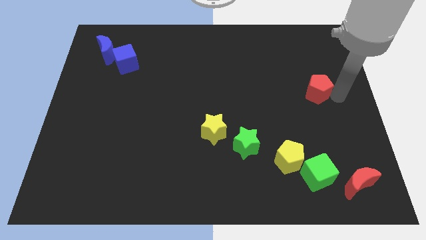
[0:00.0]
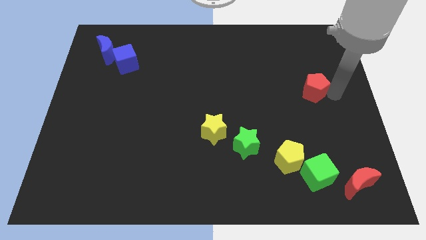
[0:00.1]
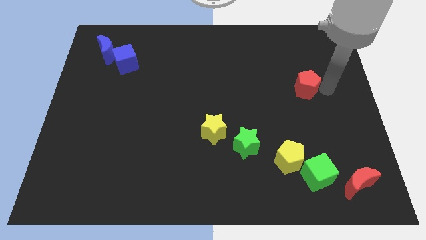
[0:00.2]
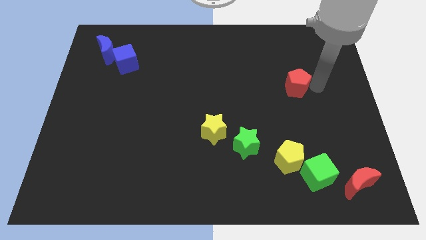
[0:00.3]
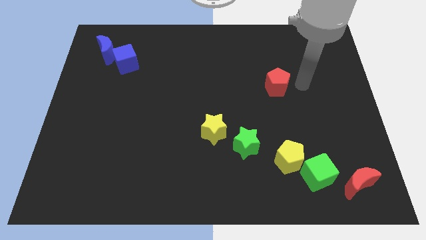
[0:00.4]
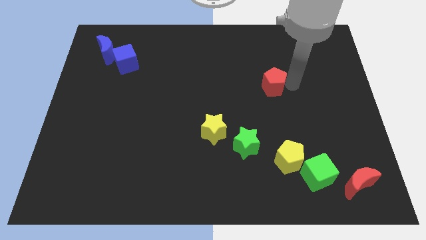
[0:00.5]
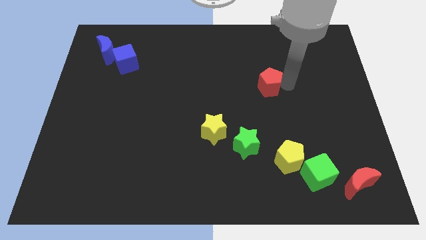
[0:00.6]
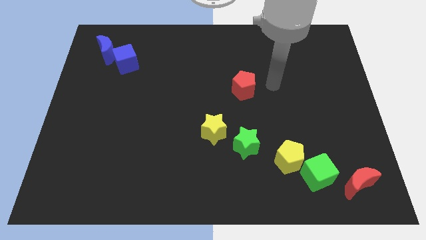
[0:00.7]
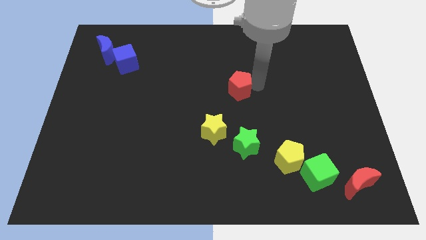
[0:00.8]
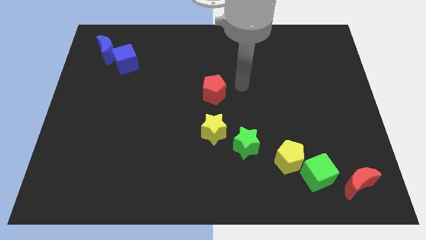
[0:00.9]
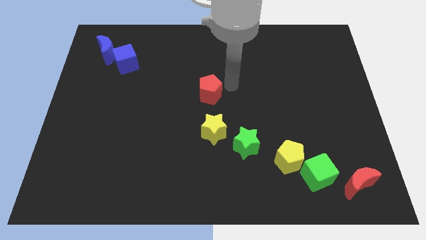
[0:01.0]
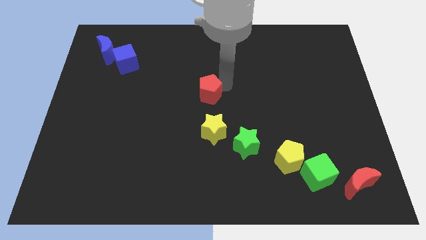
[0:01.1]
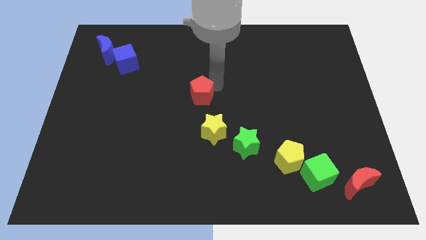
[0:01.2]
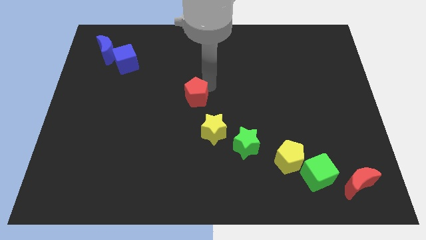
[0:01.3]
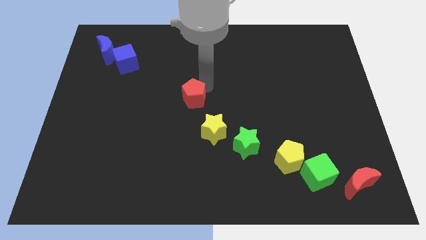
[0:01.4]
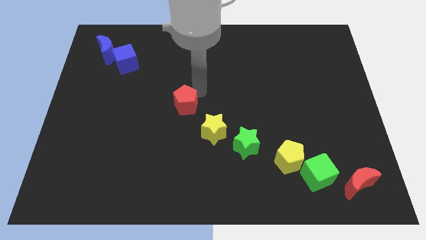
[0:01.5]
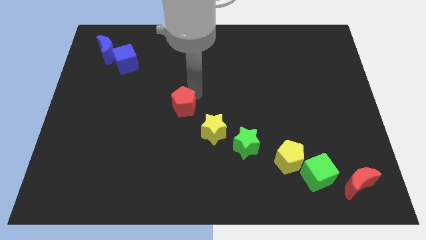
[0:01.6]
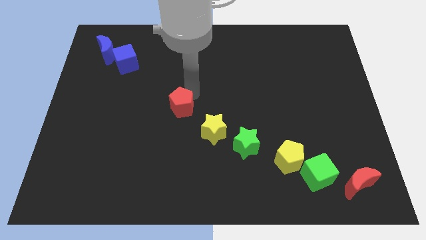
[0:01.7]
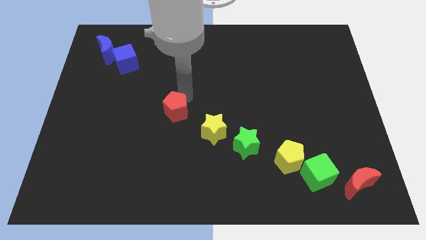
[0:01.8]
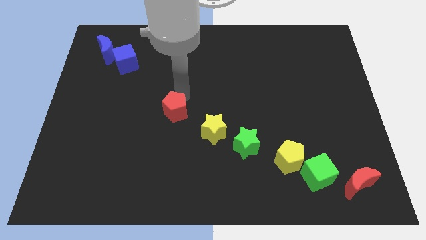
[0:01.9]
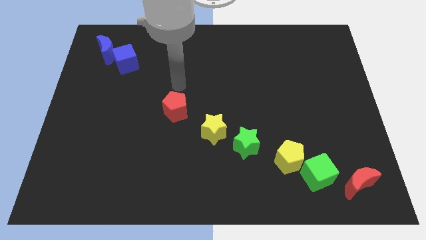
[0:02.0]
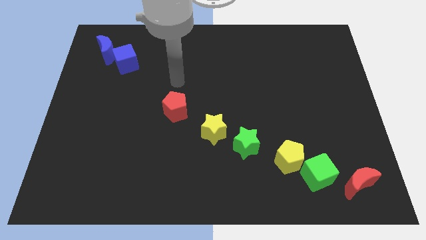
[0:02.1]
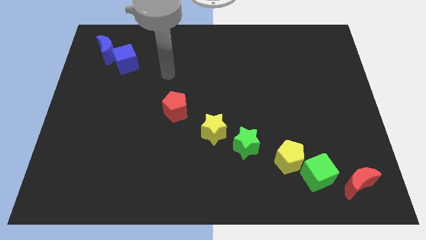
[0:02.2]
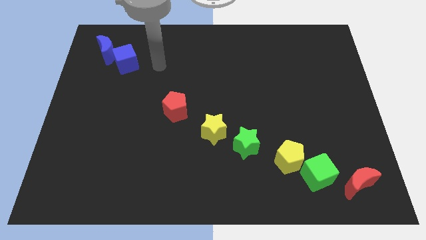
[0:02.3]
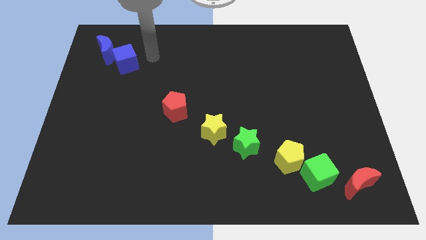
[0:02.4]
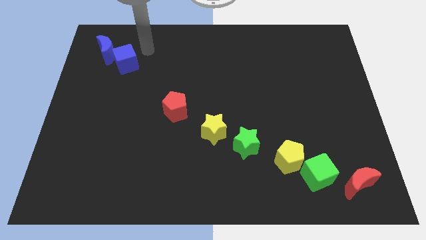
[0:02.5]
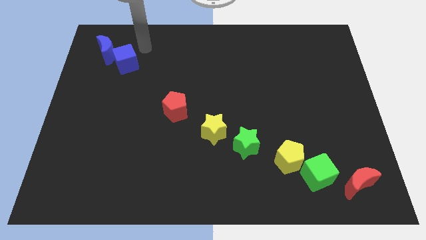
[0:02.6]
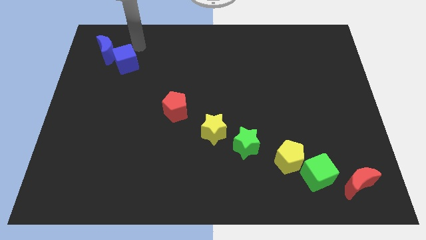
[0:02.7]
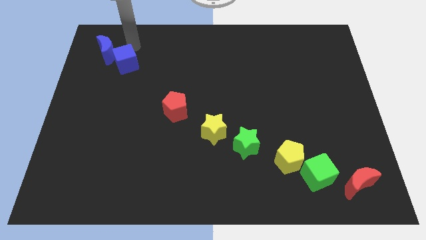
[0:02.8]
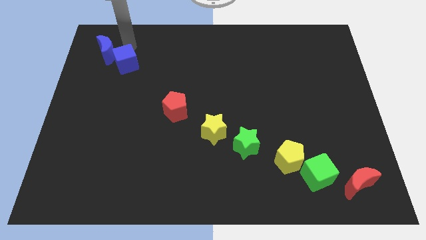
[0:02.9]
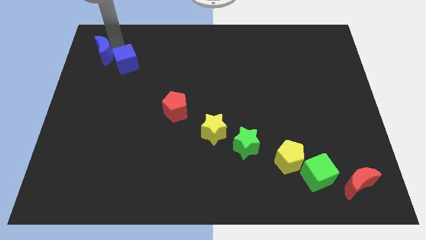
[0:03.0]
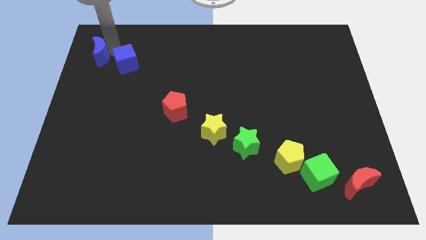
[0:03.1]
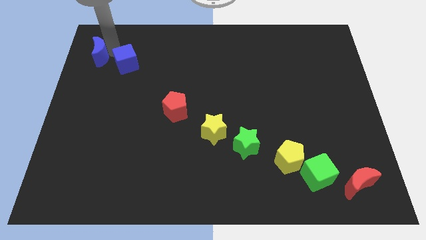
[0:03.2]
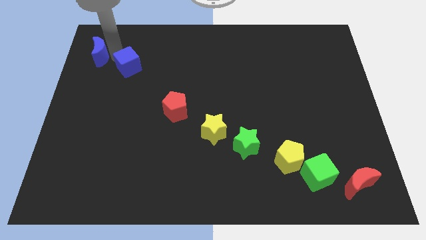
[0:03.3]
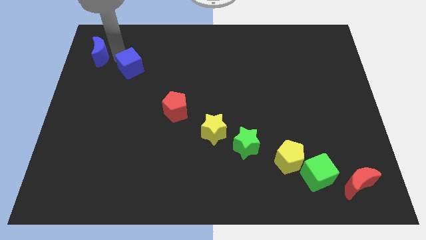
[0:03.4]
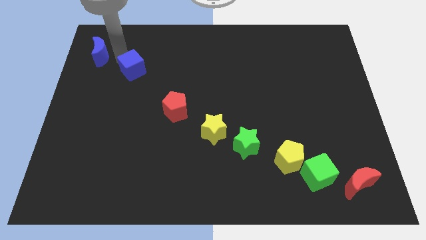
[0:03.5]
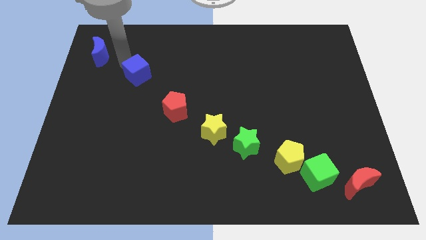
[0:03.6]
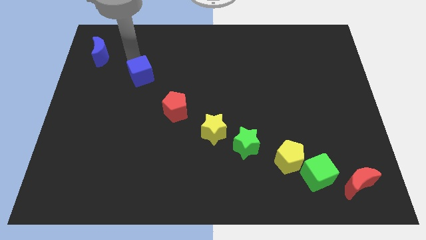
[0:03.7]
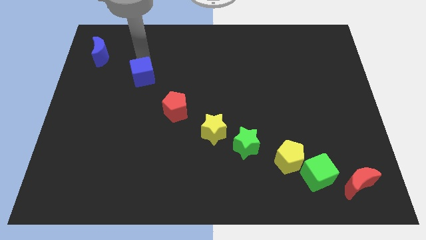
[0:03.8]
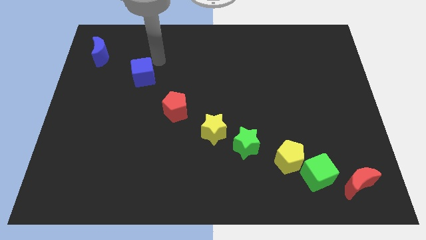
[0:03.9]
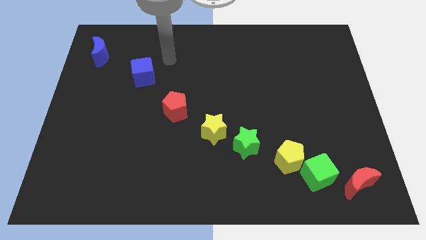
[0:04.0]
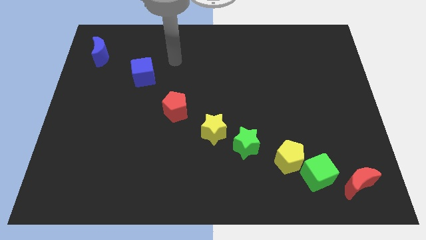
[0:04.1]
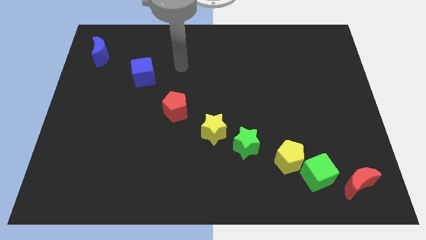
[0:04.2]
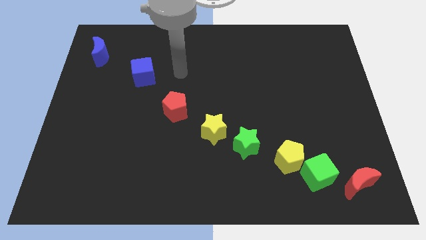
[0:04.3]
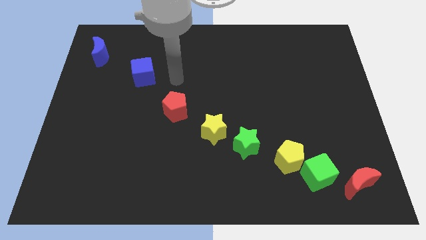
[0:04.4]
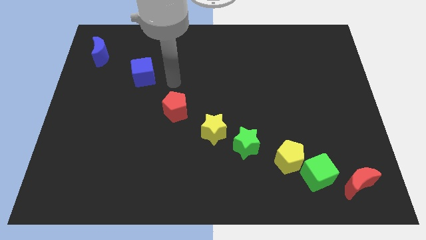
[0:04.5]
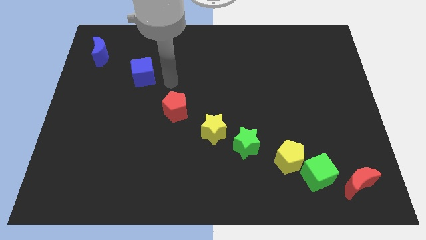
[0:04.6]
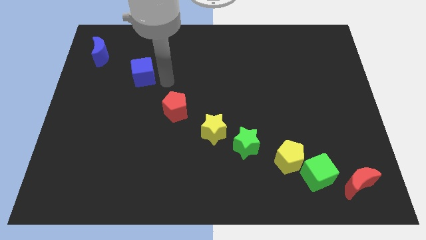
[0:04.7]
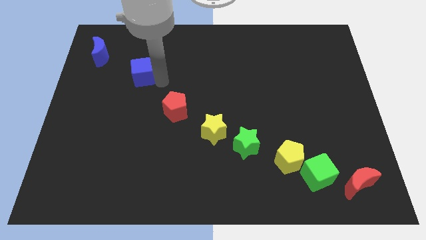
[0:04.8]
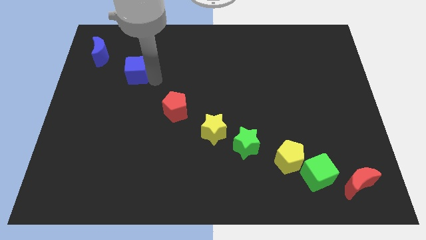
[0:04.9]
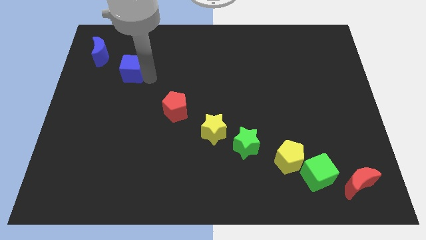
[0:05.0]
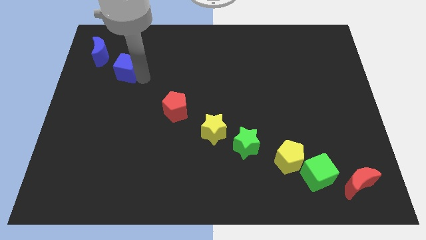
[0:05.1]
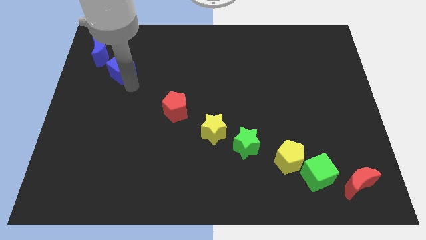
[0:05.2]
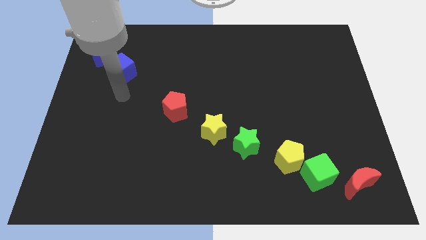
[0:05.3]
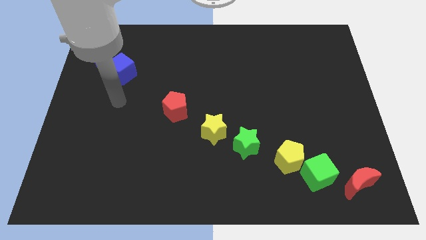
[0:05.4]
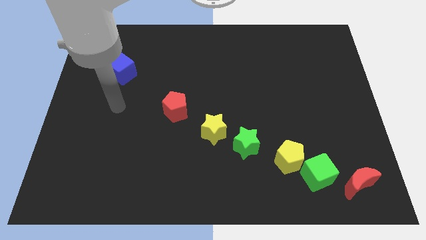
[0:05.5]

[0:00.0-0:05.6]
place blue cube close to the blue crescent

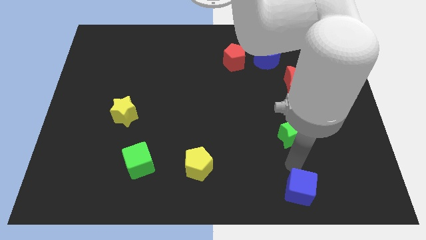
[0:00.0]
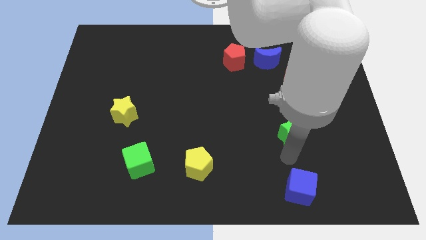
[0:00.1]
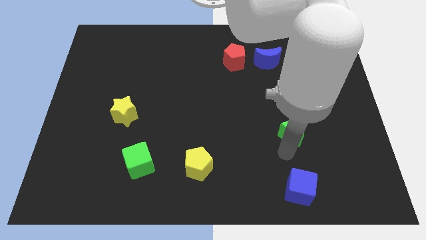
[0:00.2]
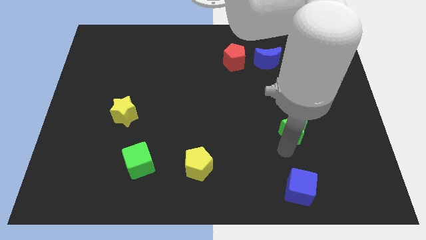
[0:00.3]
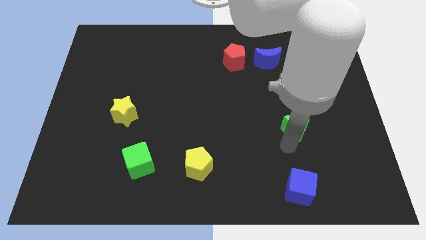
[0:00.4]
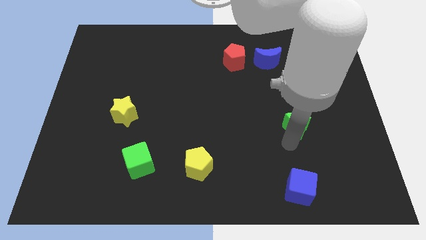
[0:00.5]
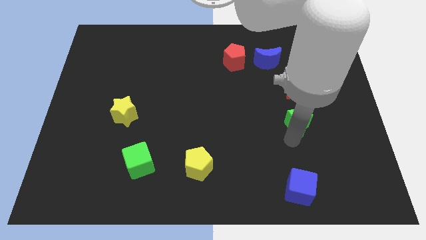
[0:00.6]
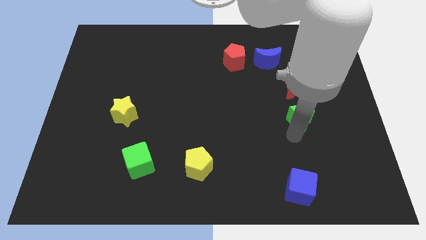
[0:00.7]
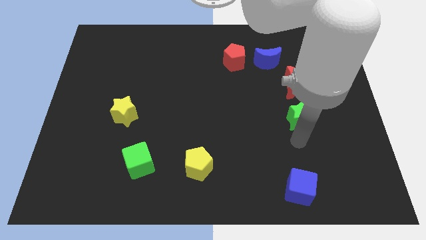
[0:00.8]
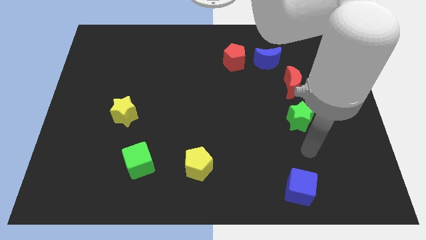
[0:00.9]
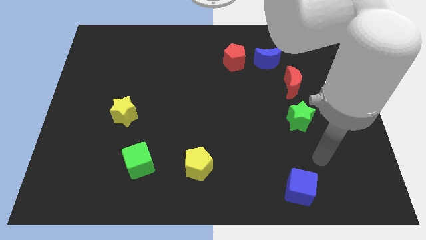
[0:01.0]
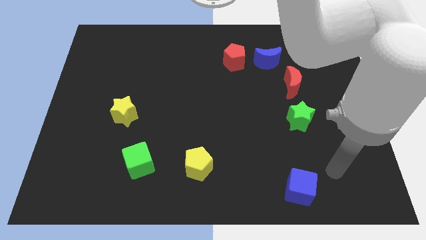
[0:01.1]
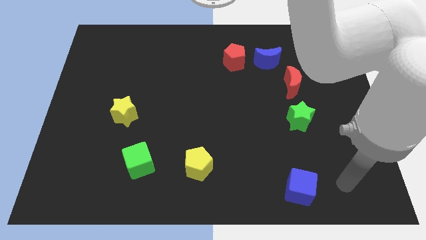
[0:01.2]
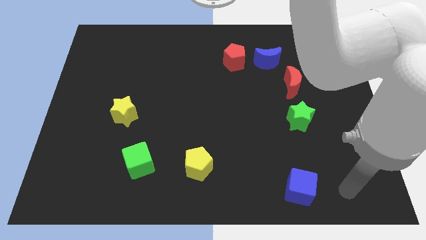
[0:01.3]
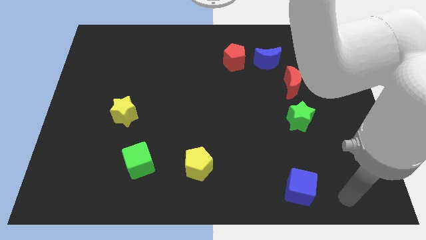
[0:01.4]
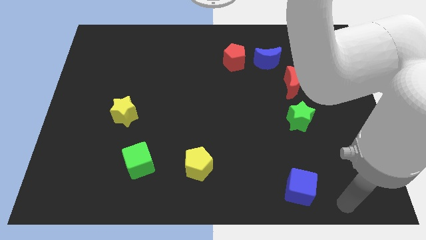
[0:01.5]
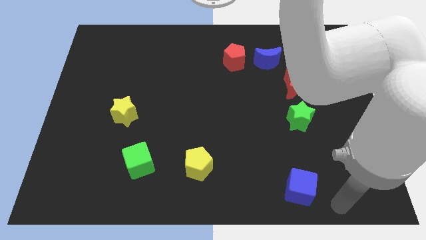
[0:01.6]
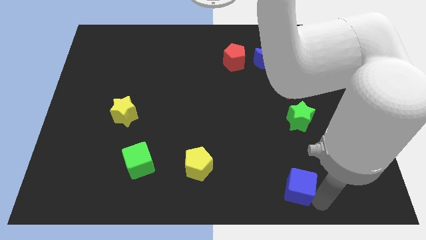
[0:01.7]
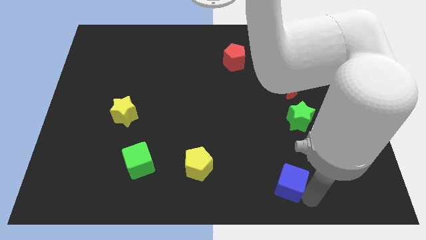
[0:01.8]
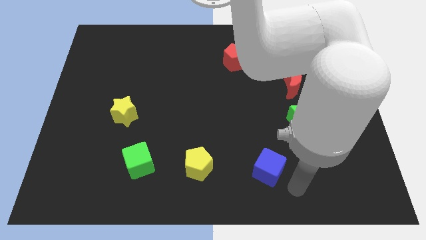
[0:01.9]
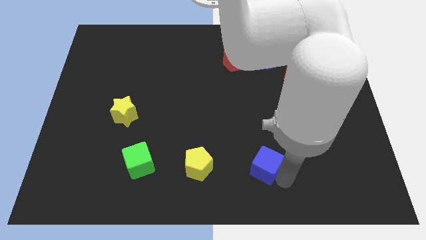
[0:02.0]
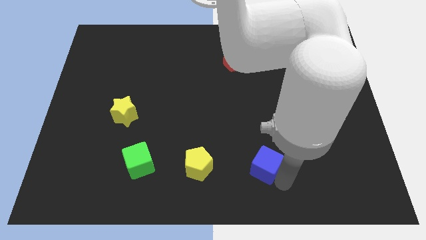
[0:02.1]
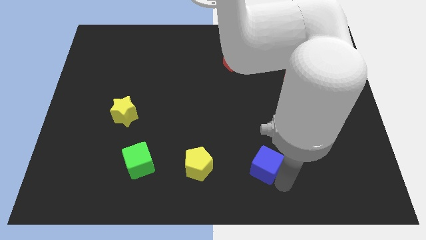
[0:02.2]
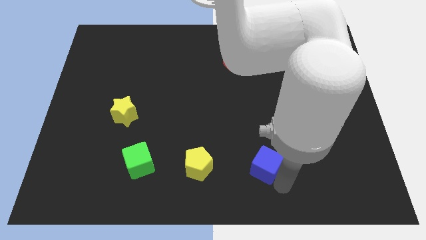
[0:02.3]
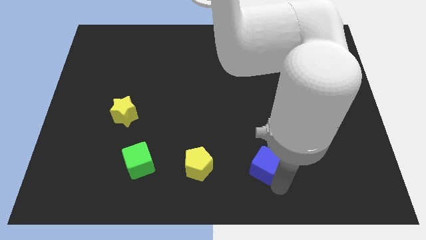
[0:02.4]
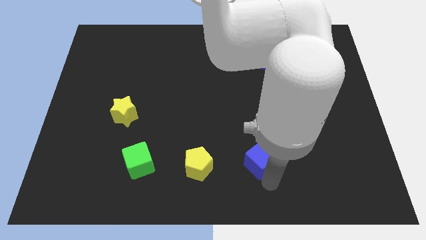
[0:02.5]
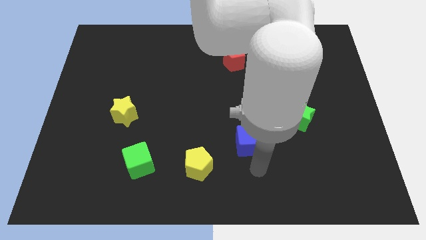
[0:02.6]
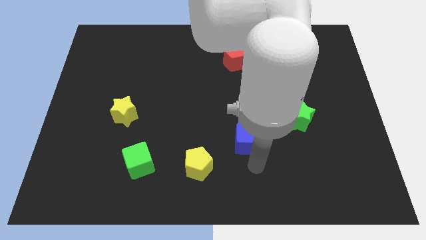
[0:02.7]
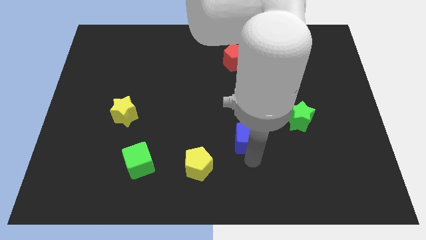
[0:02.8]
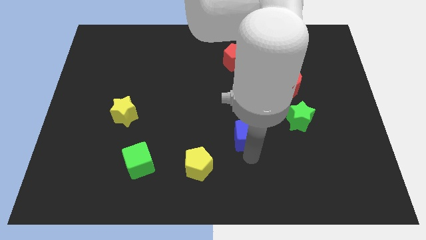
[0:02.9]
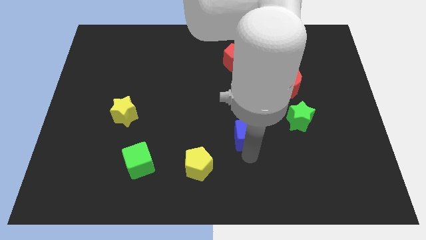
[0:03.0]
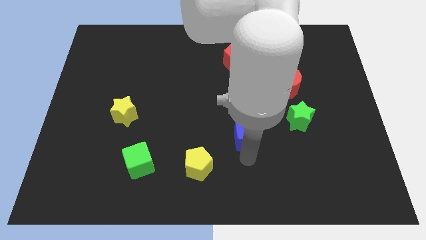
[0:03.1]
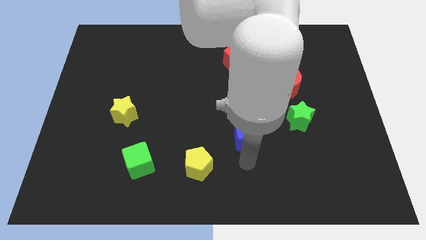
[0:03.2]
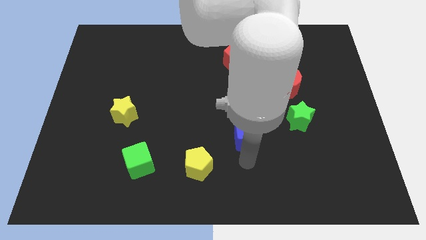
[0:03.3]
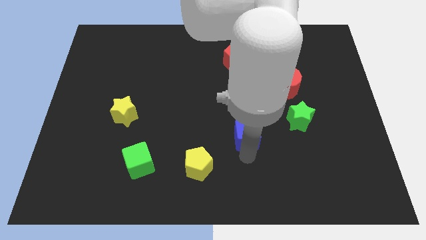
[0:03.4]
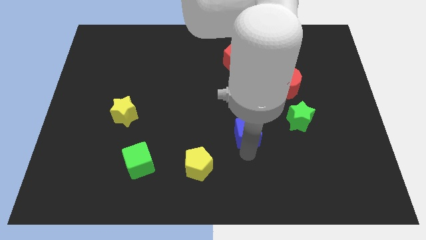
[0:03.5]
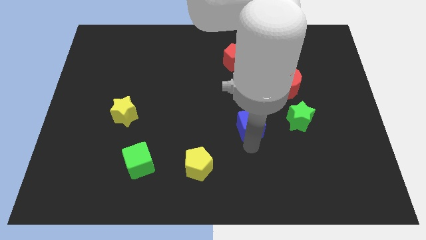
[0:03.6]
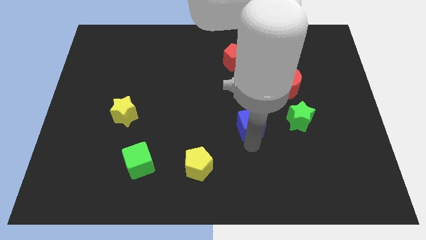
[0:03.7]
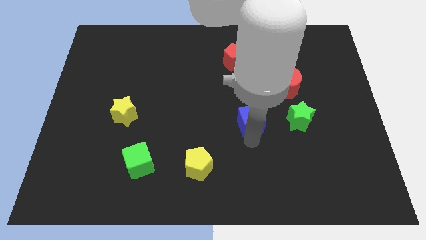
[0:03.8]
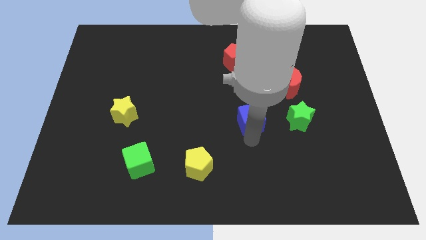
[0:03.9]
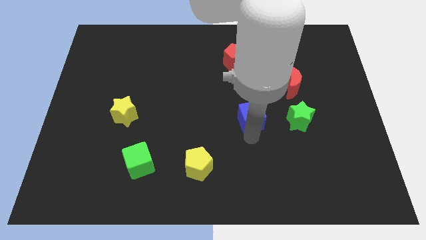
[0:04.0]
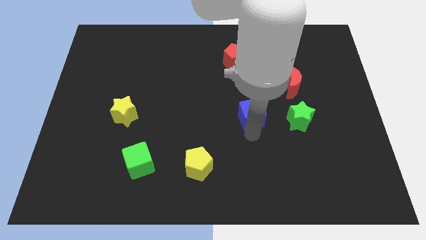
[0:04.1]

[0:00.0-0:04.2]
place the green star below the red crescent
